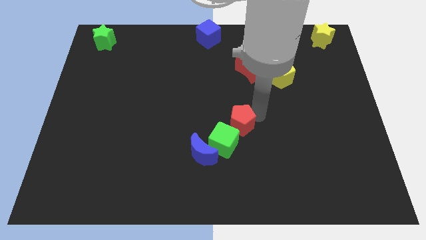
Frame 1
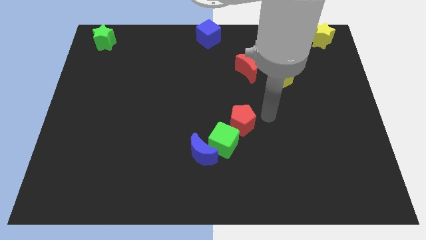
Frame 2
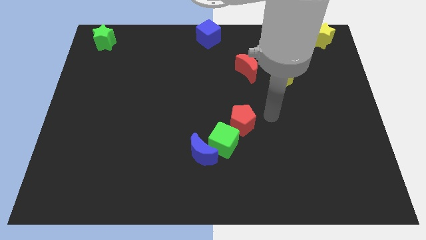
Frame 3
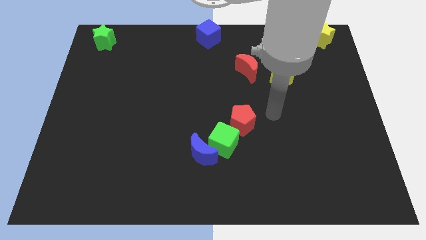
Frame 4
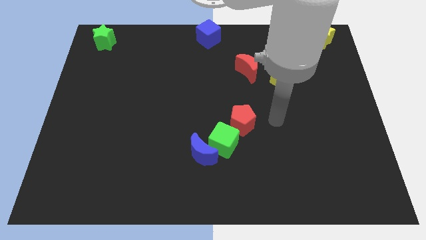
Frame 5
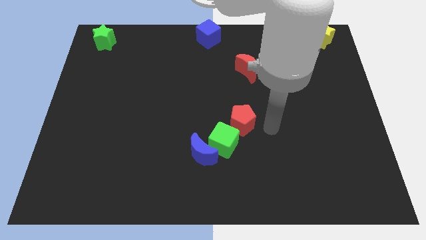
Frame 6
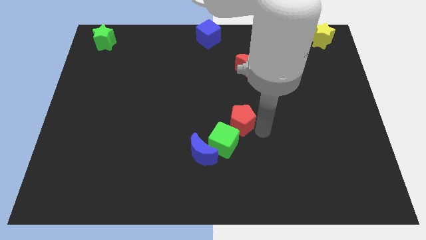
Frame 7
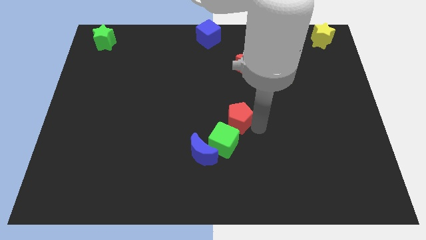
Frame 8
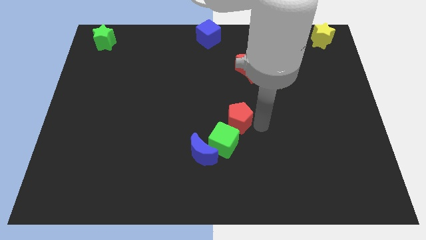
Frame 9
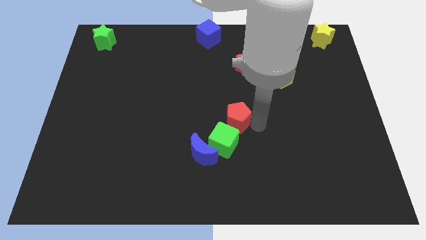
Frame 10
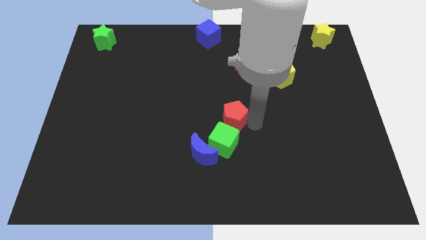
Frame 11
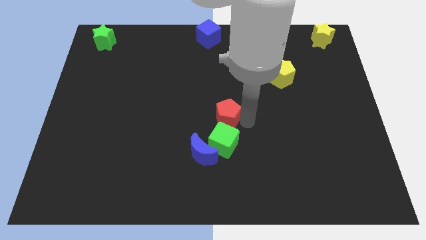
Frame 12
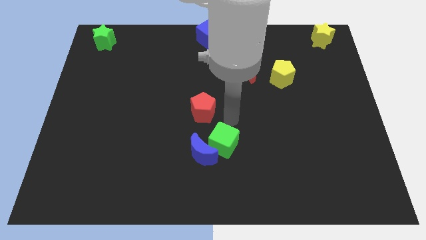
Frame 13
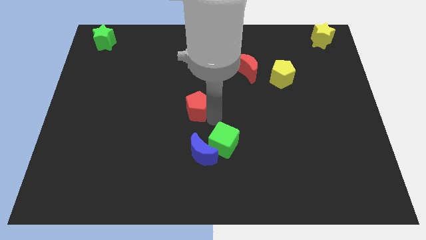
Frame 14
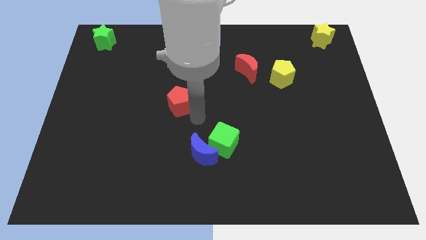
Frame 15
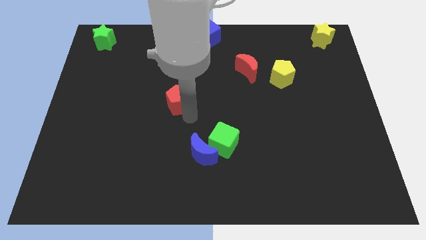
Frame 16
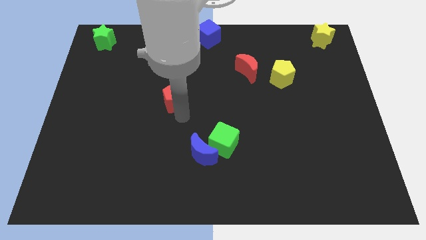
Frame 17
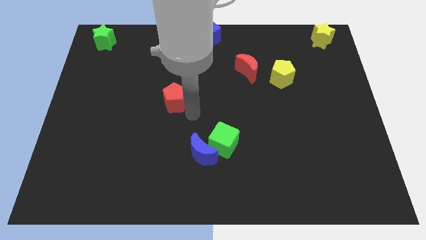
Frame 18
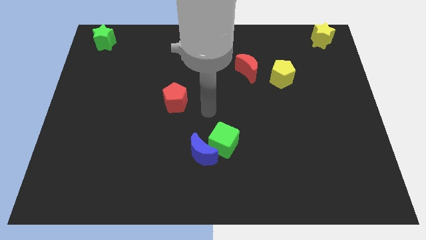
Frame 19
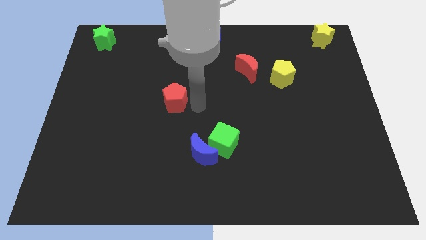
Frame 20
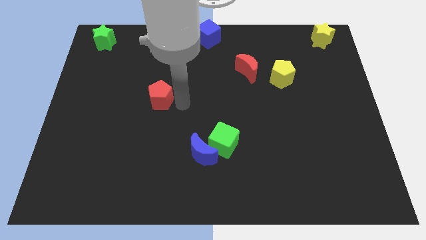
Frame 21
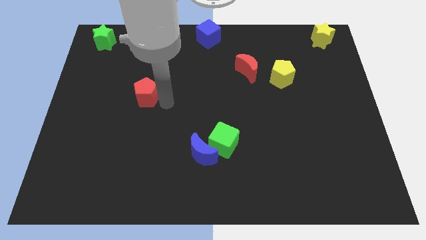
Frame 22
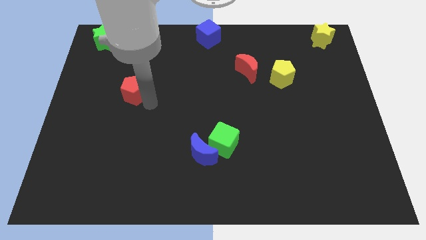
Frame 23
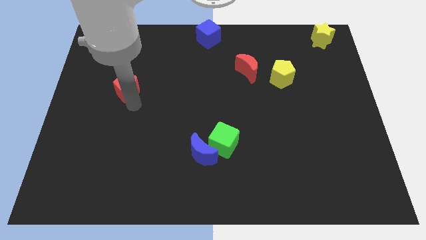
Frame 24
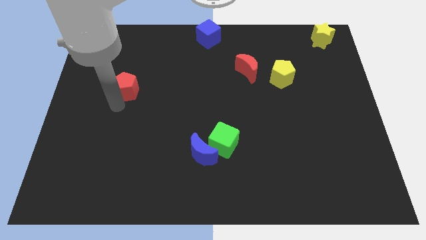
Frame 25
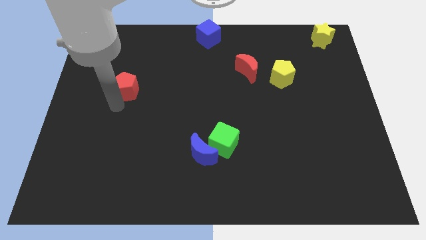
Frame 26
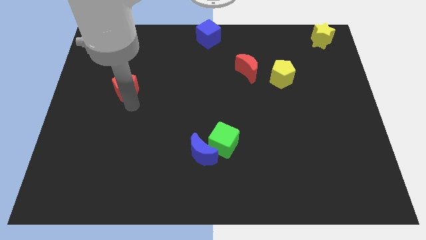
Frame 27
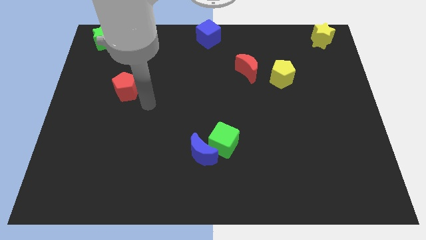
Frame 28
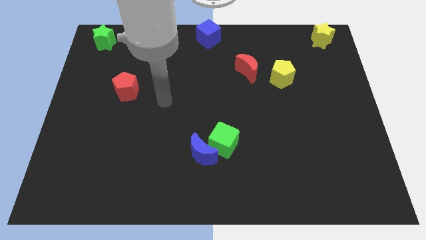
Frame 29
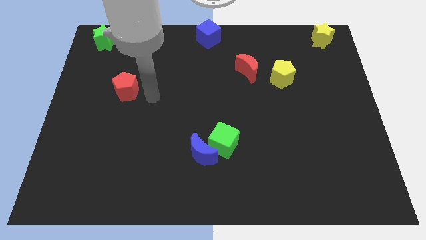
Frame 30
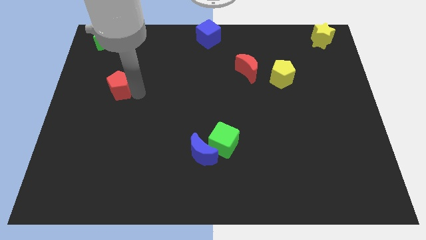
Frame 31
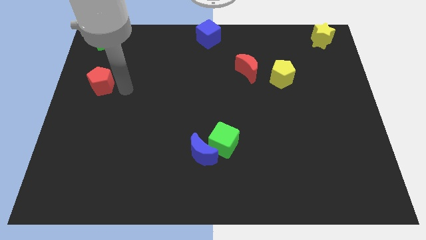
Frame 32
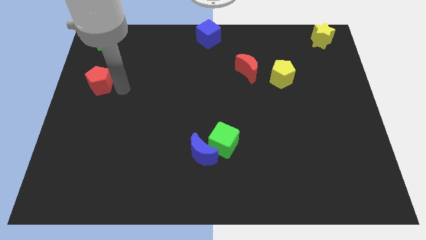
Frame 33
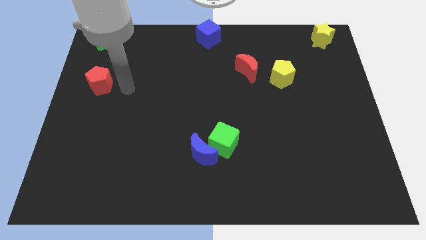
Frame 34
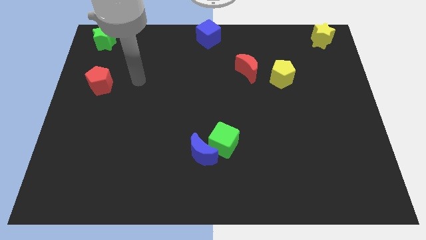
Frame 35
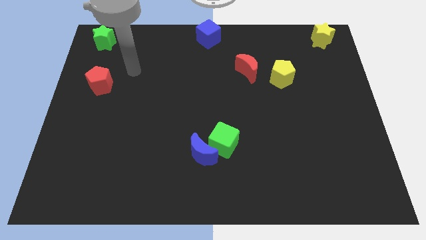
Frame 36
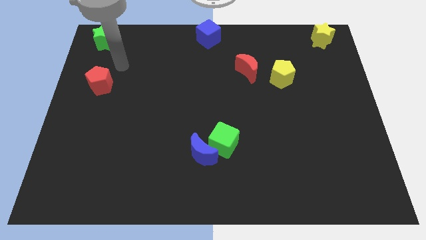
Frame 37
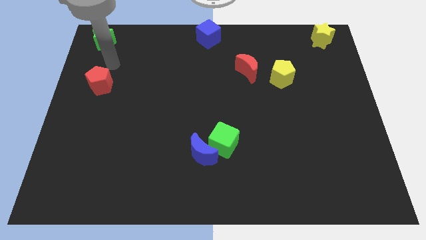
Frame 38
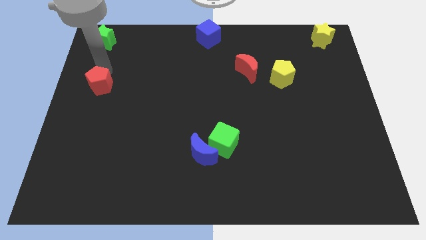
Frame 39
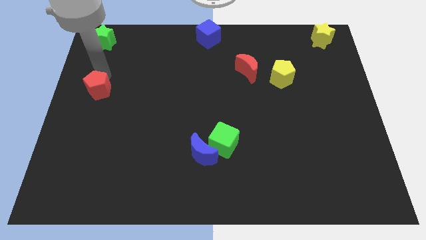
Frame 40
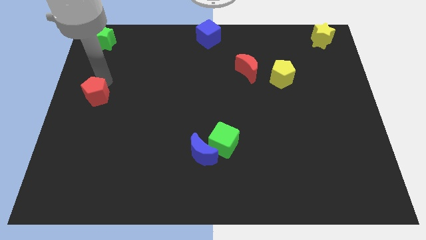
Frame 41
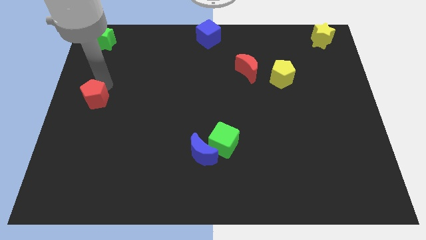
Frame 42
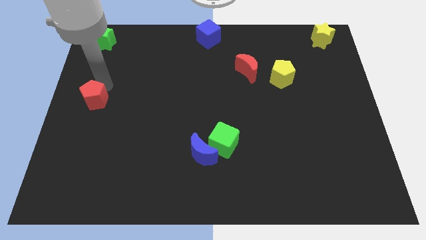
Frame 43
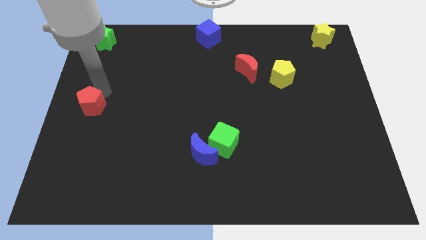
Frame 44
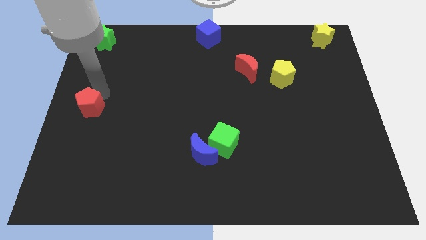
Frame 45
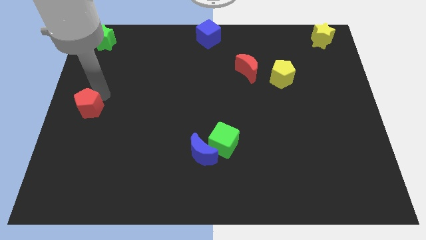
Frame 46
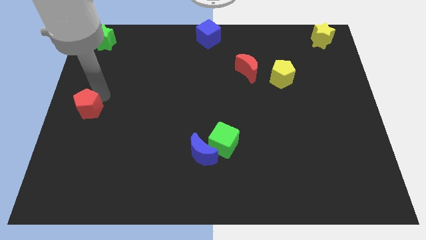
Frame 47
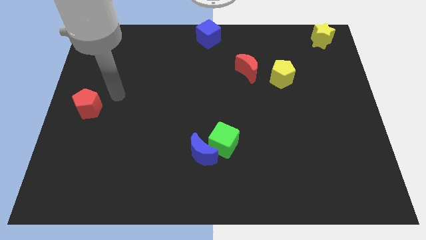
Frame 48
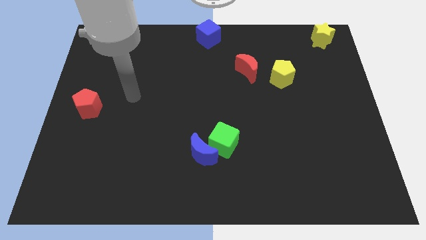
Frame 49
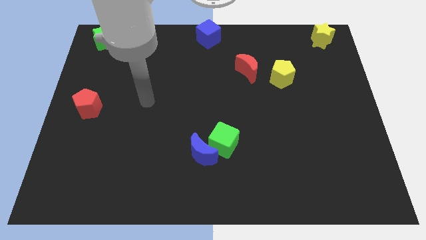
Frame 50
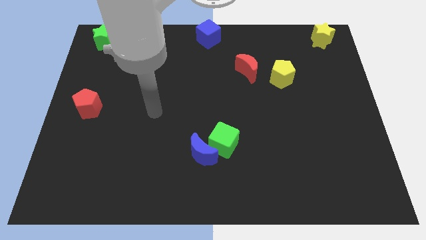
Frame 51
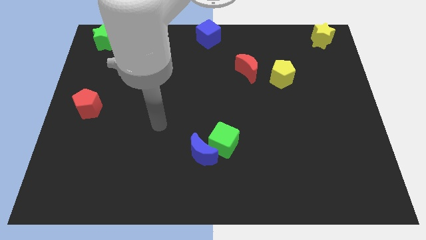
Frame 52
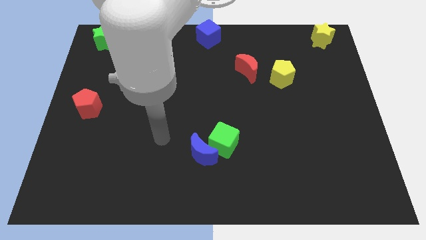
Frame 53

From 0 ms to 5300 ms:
place the red pentagon below the green star

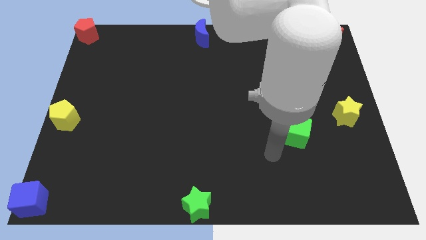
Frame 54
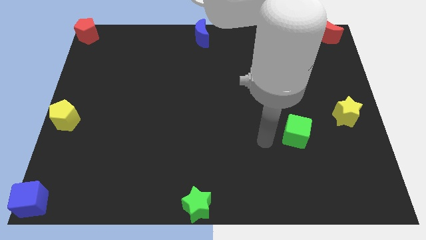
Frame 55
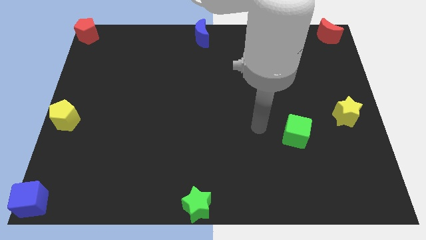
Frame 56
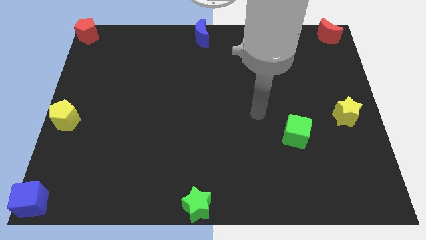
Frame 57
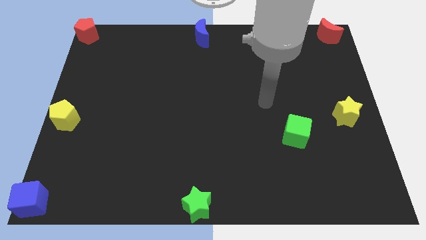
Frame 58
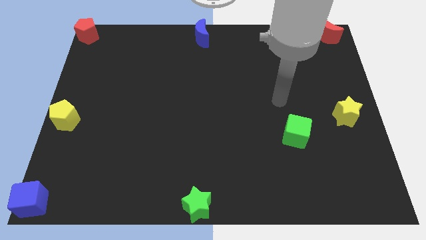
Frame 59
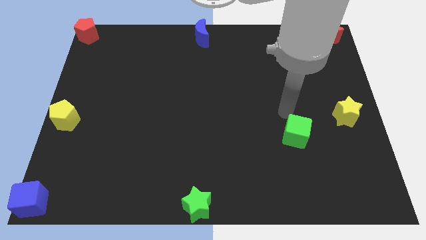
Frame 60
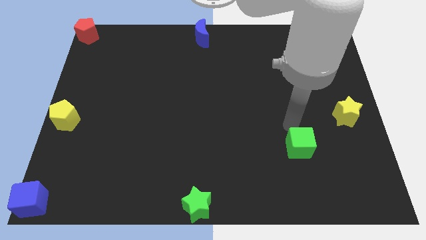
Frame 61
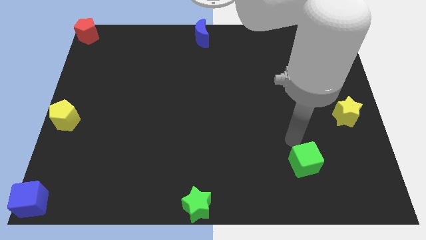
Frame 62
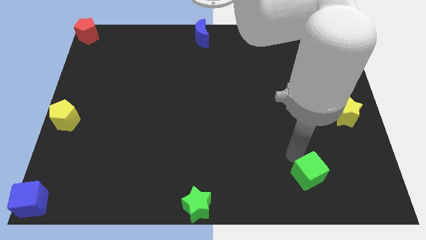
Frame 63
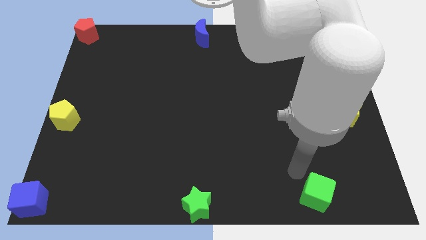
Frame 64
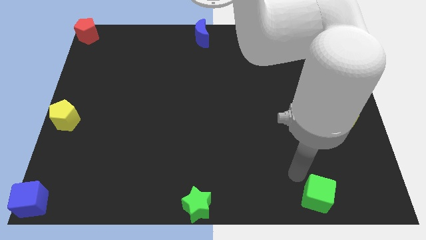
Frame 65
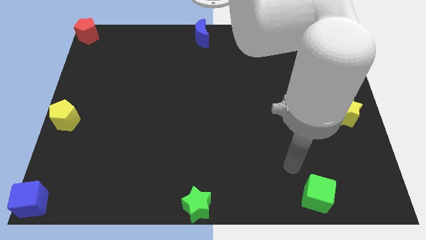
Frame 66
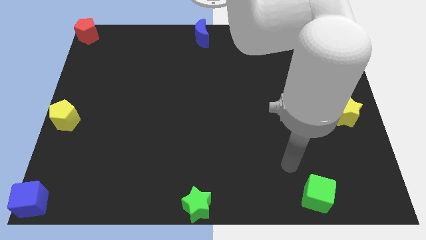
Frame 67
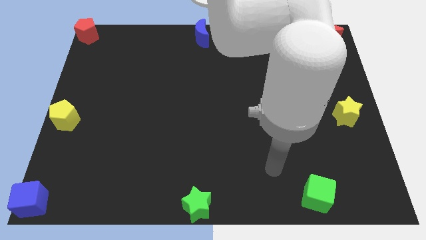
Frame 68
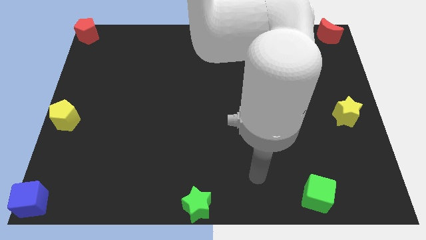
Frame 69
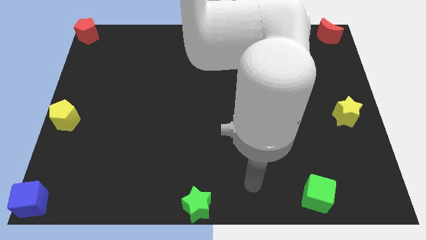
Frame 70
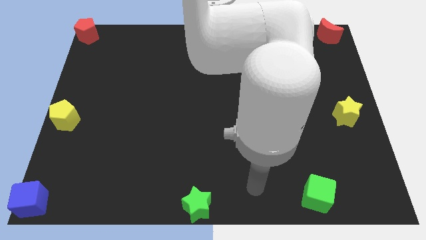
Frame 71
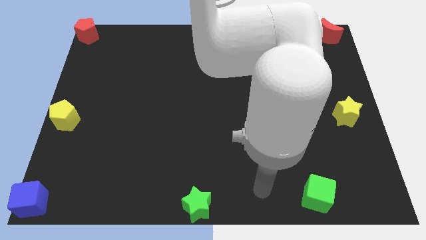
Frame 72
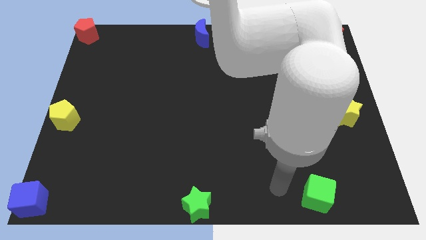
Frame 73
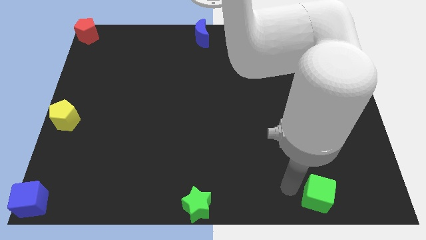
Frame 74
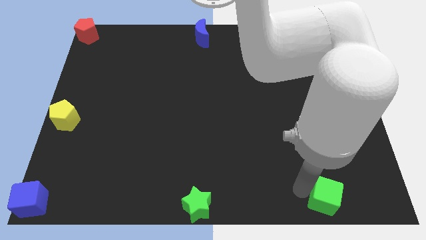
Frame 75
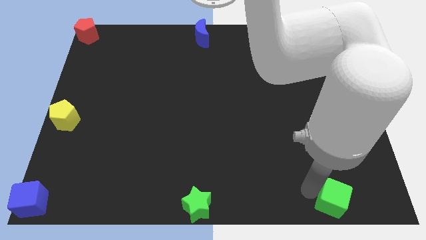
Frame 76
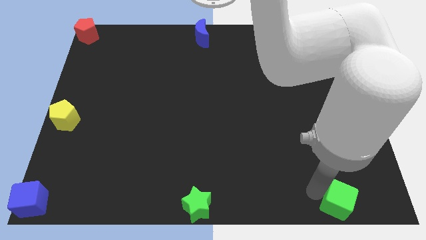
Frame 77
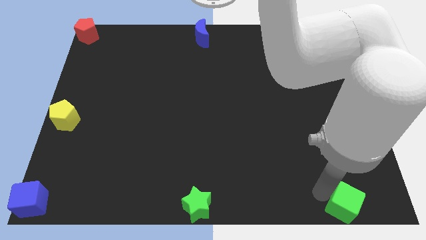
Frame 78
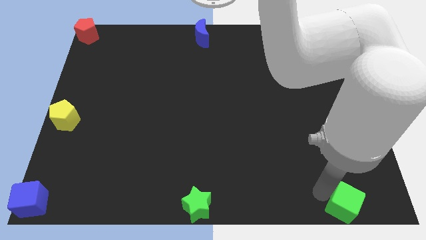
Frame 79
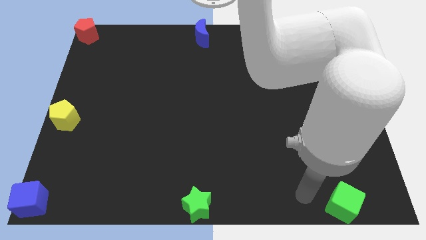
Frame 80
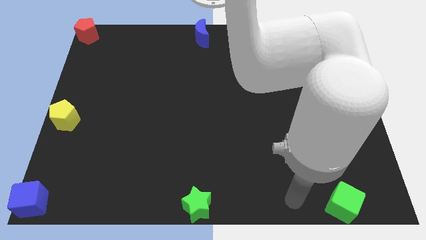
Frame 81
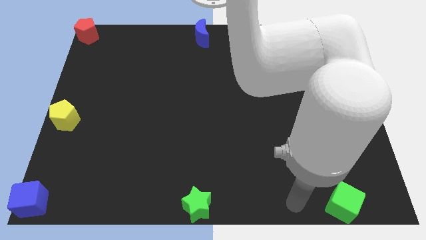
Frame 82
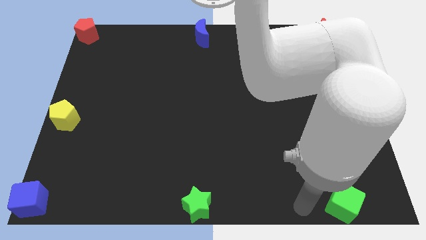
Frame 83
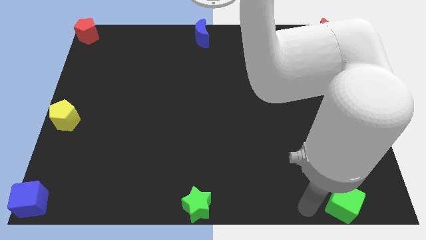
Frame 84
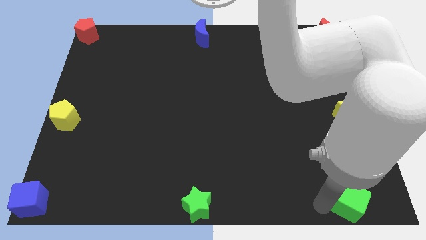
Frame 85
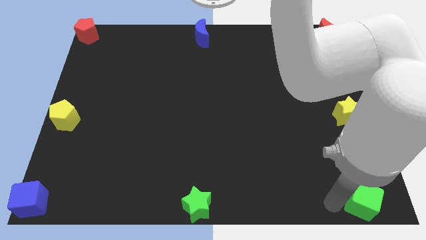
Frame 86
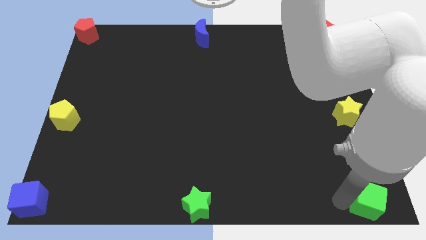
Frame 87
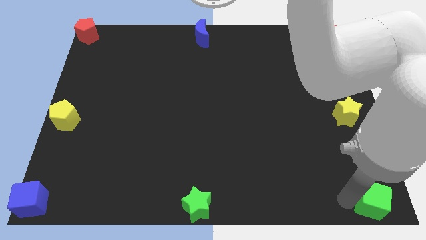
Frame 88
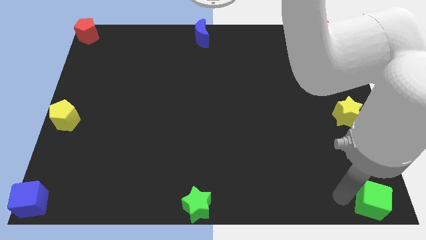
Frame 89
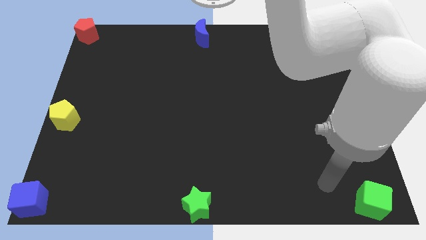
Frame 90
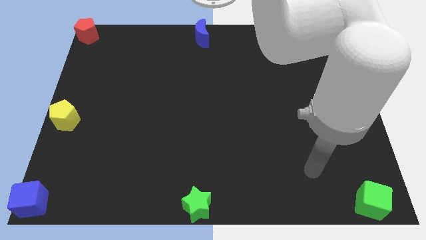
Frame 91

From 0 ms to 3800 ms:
move the green cube towards the bottom right corner
